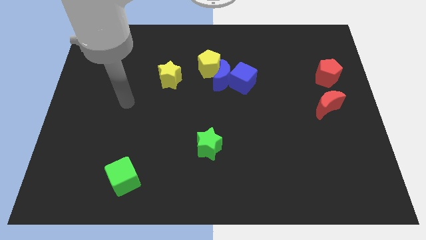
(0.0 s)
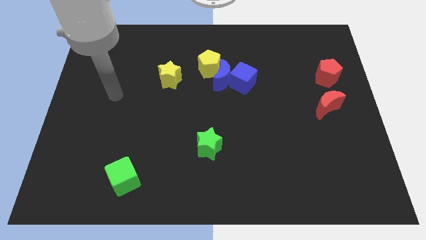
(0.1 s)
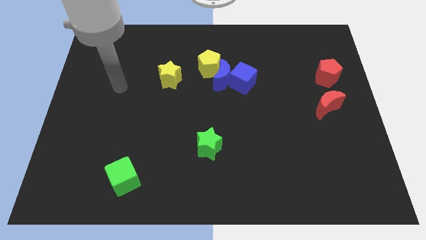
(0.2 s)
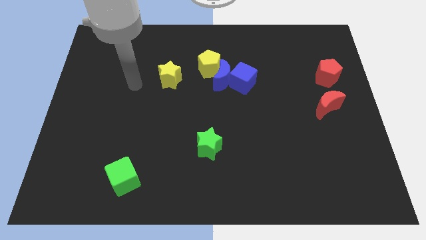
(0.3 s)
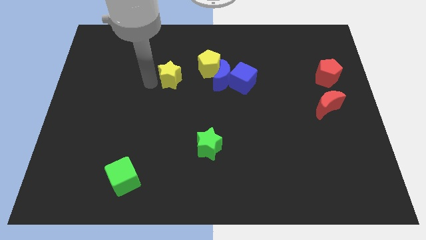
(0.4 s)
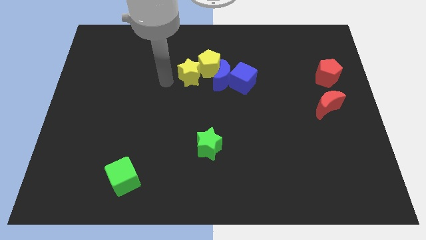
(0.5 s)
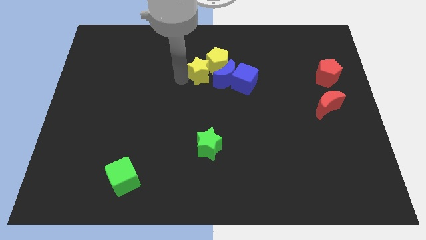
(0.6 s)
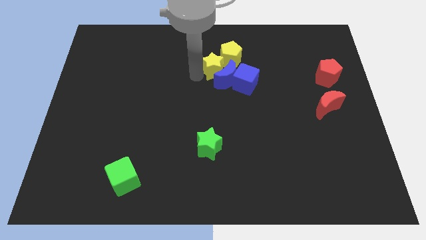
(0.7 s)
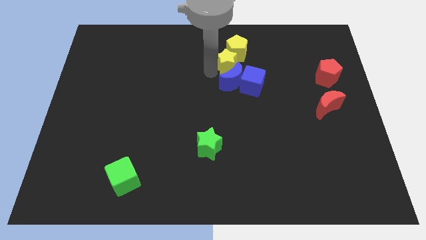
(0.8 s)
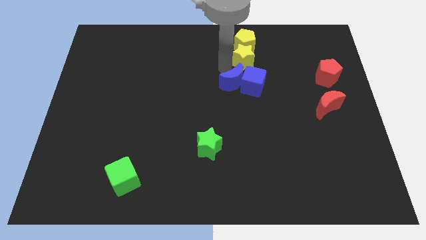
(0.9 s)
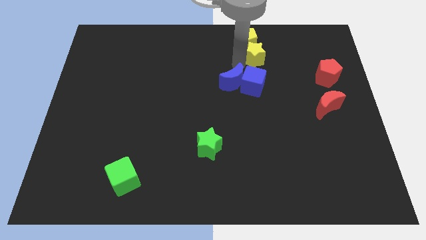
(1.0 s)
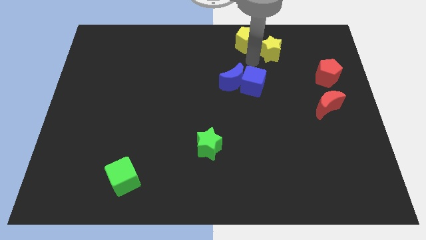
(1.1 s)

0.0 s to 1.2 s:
group up the yellow blocks at the top center of the board

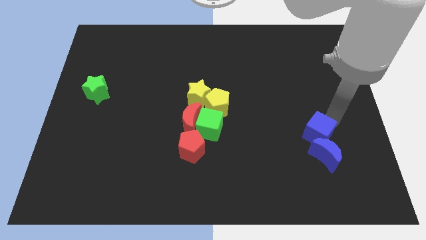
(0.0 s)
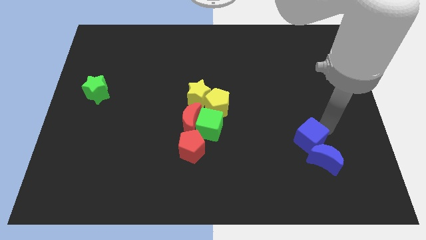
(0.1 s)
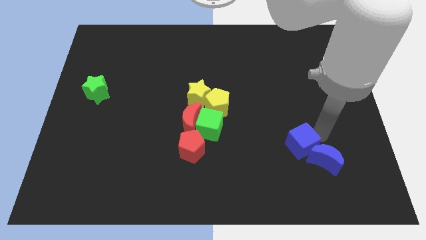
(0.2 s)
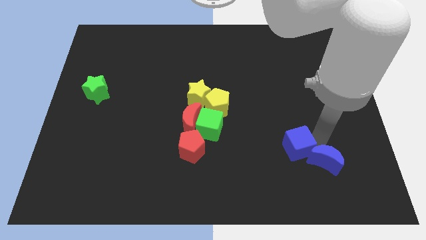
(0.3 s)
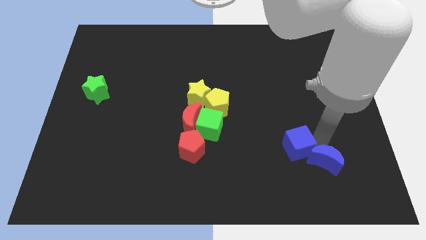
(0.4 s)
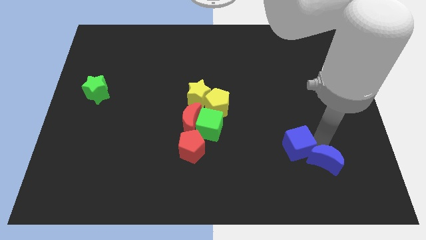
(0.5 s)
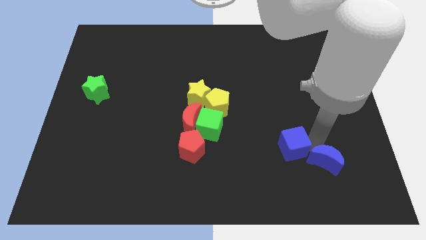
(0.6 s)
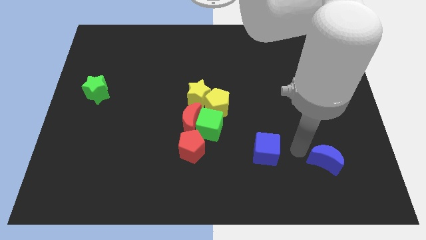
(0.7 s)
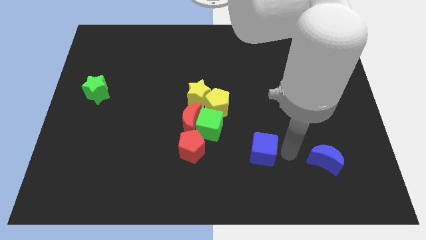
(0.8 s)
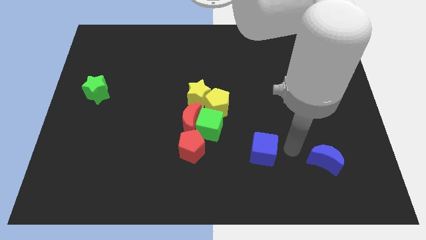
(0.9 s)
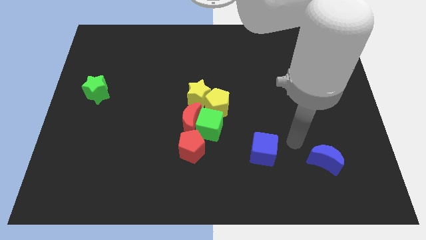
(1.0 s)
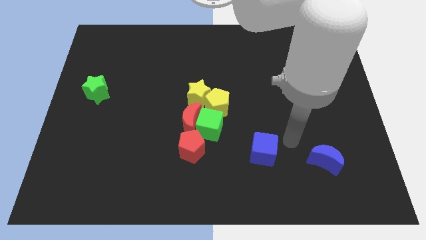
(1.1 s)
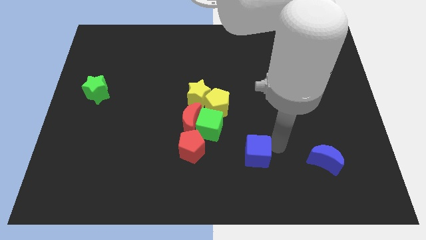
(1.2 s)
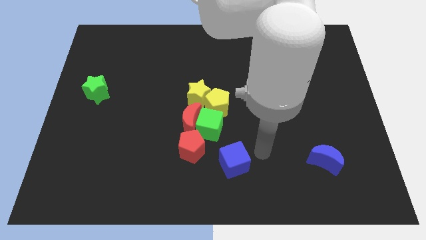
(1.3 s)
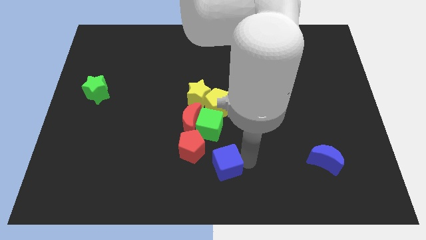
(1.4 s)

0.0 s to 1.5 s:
separate the blue square from blue crescent

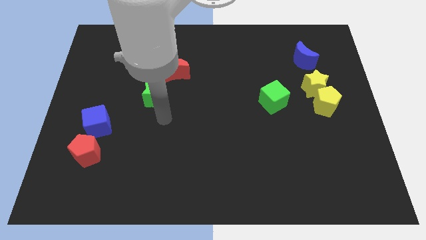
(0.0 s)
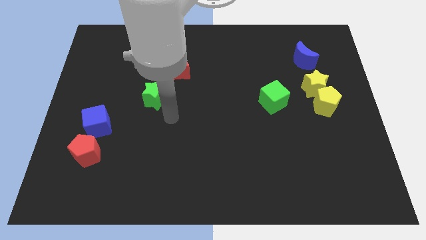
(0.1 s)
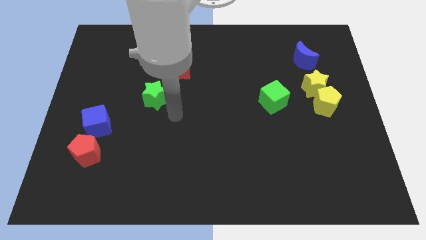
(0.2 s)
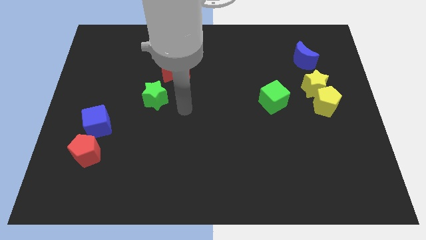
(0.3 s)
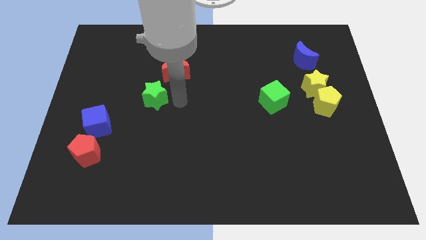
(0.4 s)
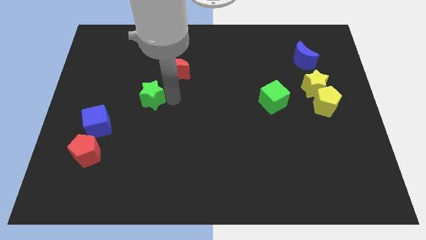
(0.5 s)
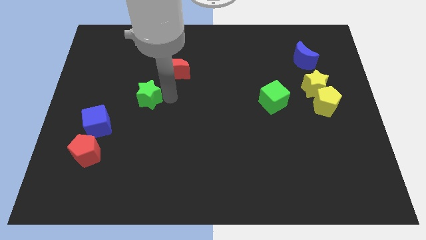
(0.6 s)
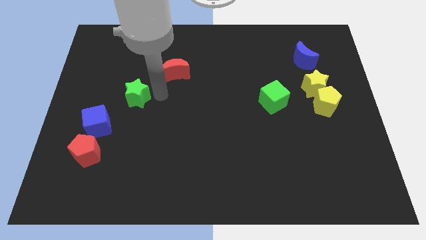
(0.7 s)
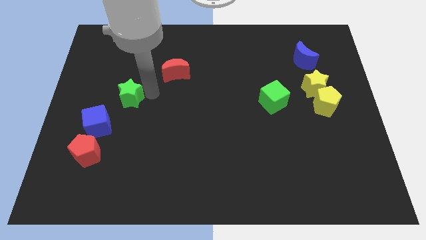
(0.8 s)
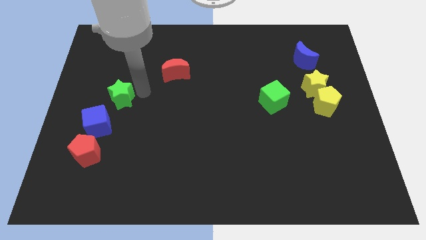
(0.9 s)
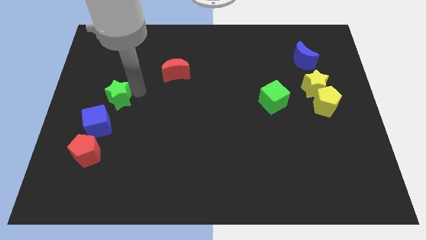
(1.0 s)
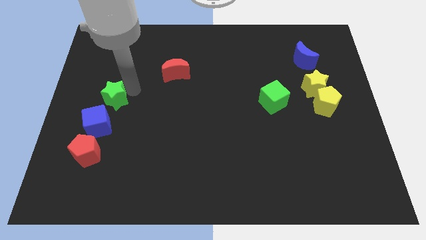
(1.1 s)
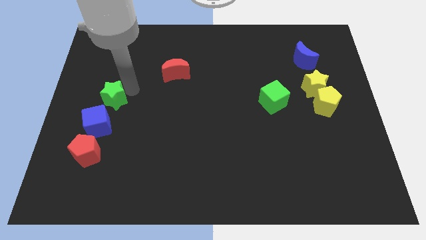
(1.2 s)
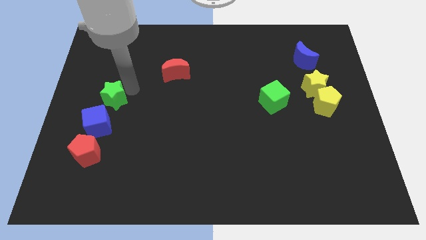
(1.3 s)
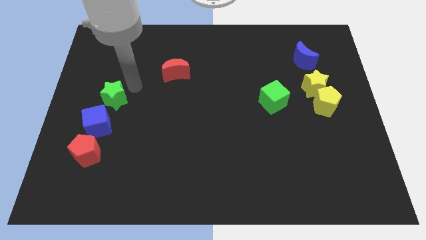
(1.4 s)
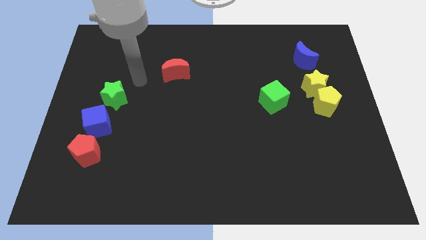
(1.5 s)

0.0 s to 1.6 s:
move green star above the blue cube

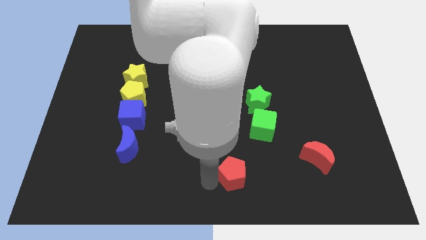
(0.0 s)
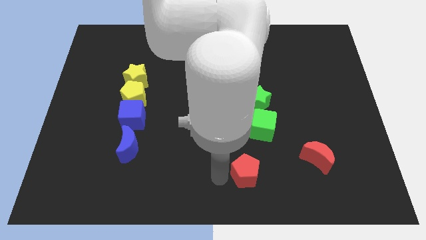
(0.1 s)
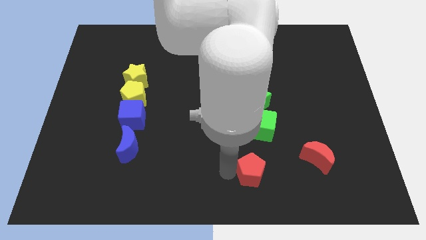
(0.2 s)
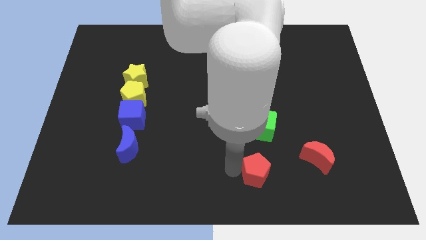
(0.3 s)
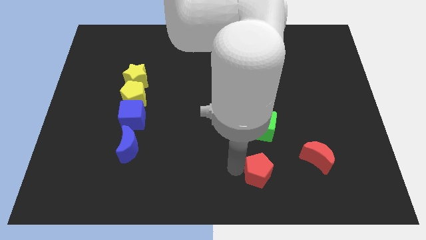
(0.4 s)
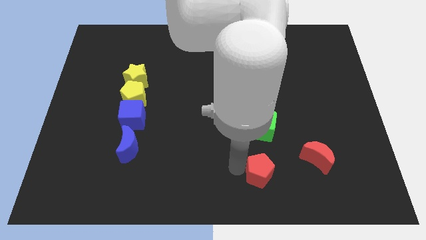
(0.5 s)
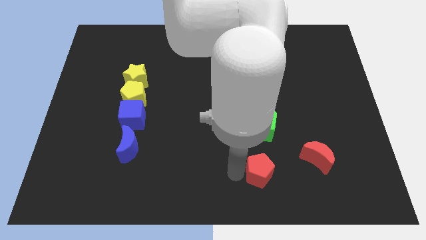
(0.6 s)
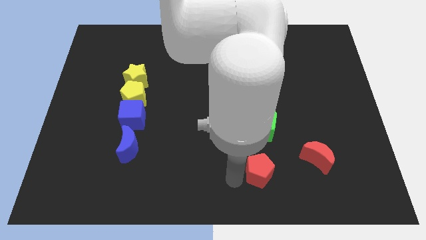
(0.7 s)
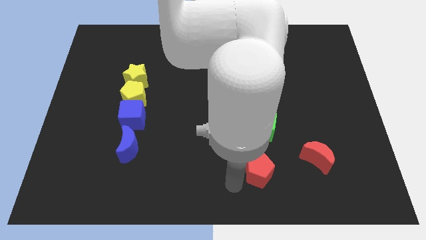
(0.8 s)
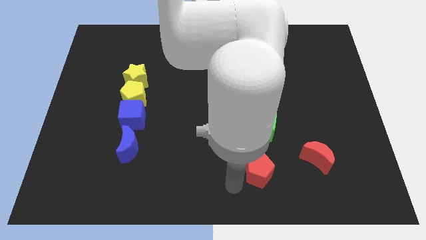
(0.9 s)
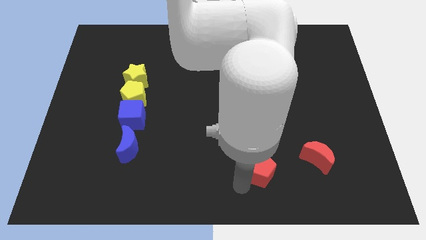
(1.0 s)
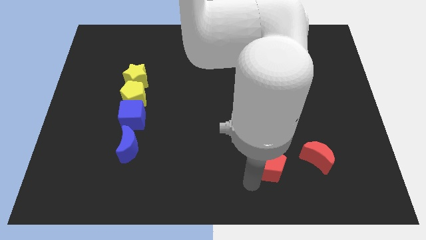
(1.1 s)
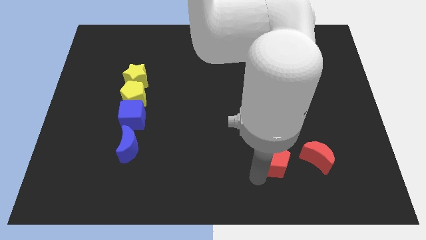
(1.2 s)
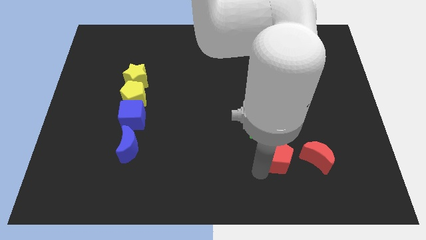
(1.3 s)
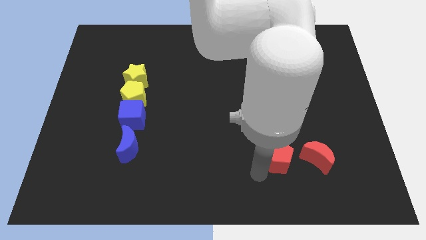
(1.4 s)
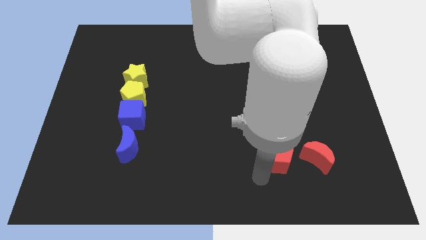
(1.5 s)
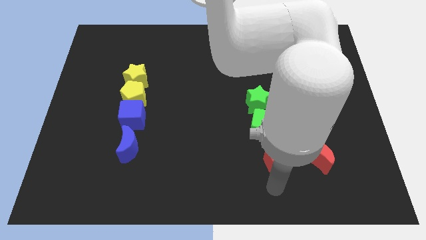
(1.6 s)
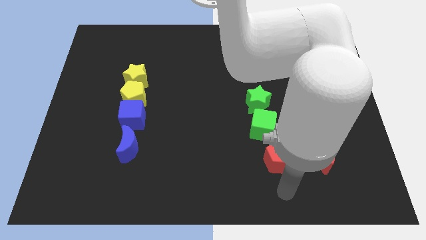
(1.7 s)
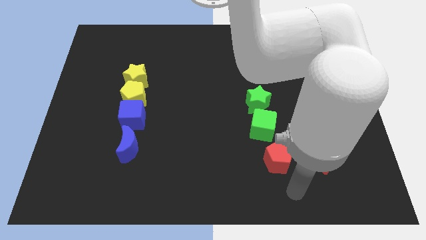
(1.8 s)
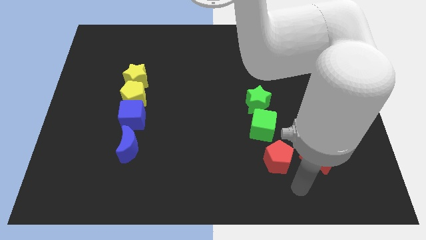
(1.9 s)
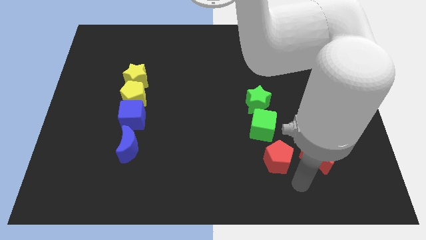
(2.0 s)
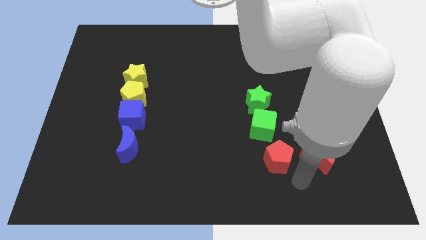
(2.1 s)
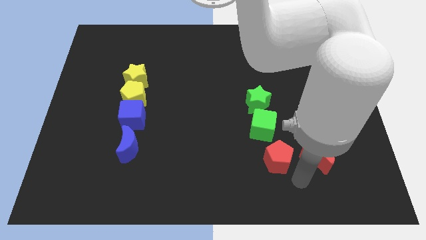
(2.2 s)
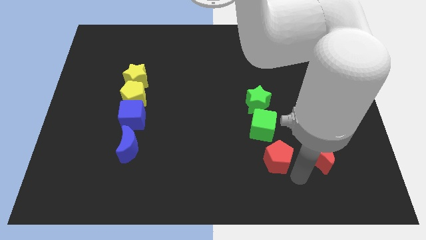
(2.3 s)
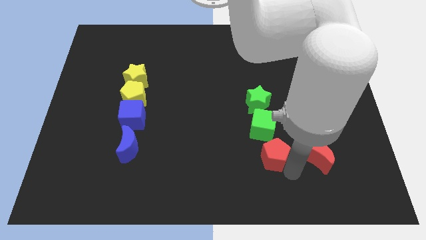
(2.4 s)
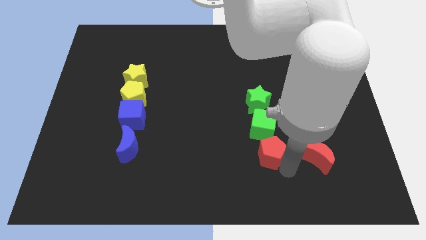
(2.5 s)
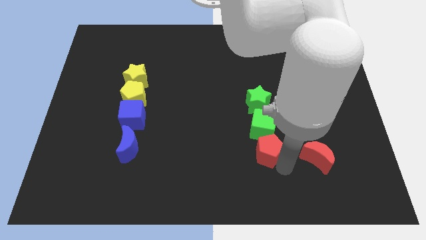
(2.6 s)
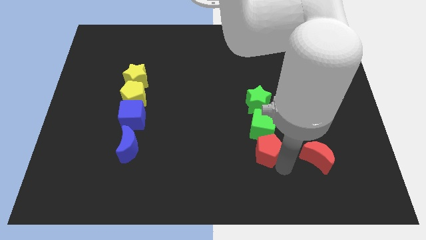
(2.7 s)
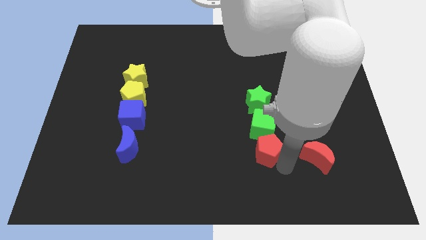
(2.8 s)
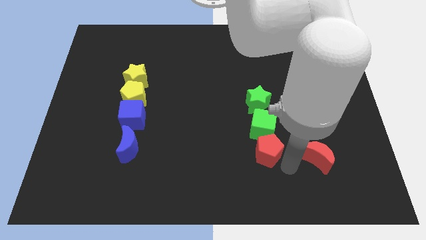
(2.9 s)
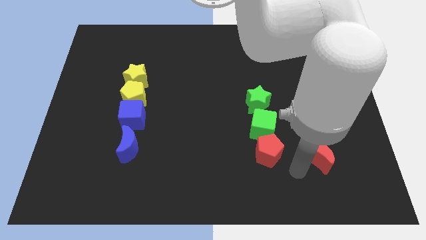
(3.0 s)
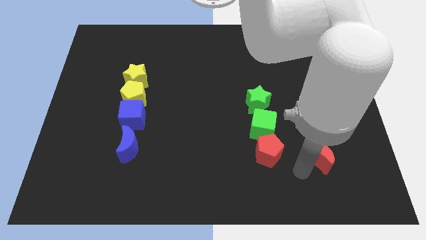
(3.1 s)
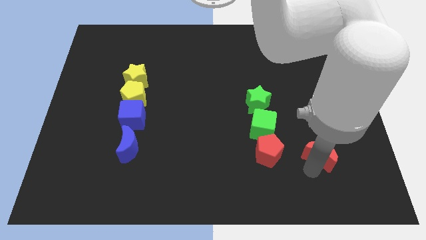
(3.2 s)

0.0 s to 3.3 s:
place the red pentagon below to the green cube

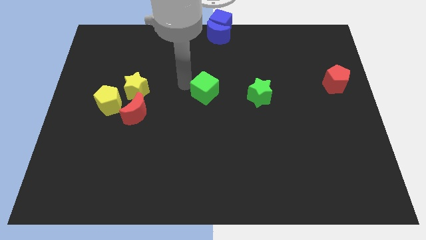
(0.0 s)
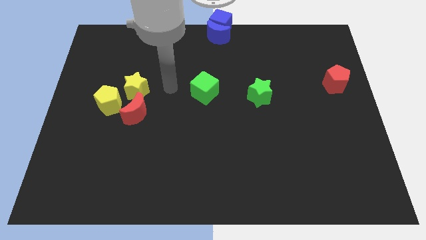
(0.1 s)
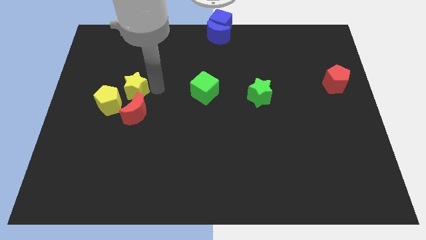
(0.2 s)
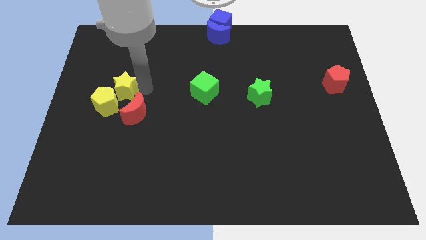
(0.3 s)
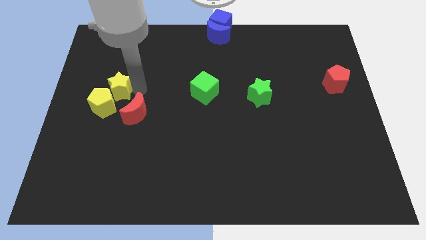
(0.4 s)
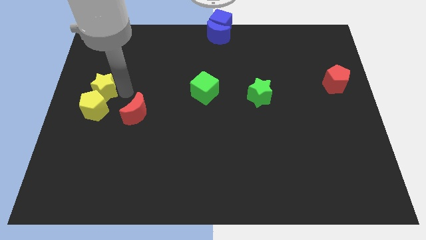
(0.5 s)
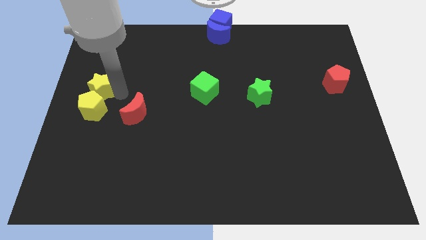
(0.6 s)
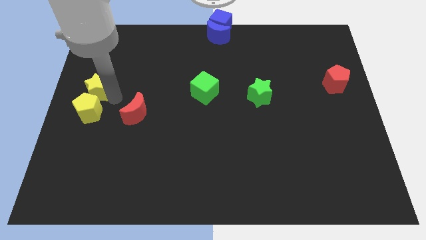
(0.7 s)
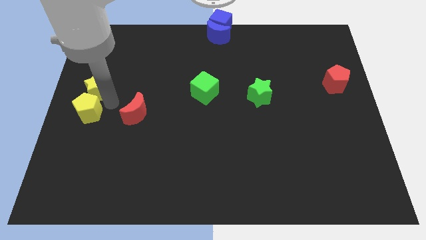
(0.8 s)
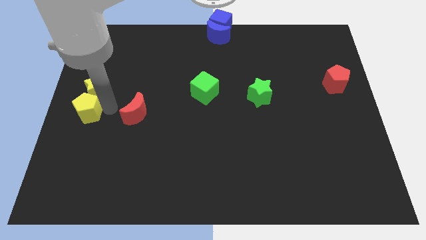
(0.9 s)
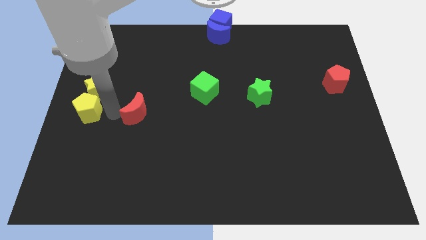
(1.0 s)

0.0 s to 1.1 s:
push the yellow star into yellow pentagon

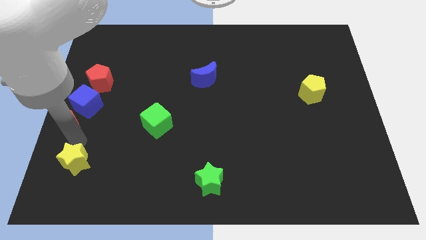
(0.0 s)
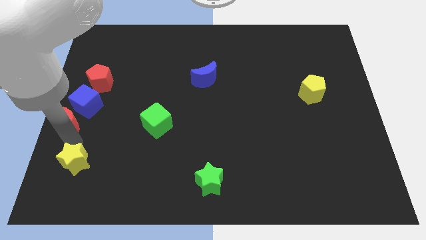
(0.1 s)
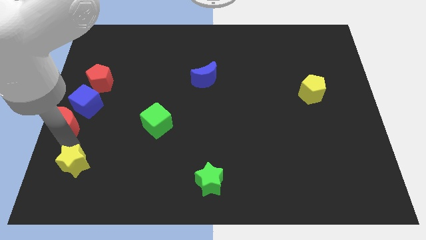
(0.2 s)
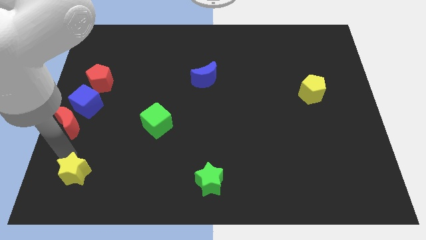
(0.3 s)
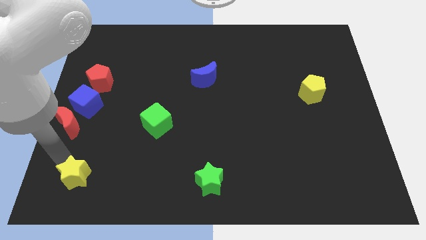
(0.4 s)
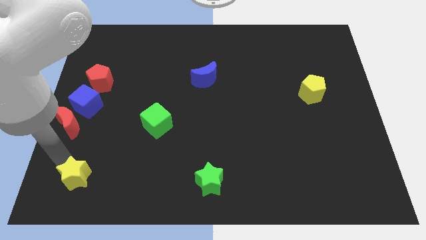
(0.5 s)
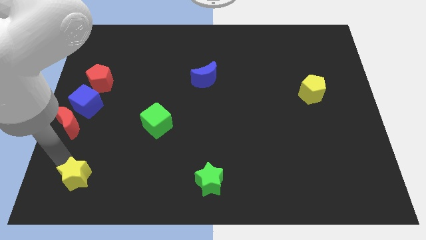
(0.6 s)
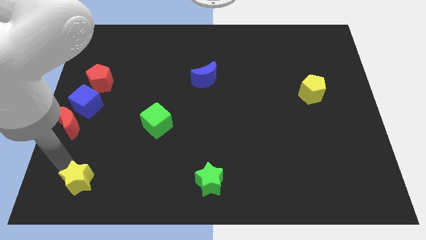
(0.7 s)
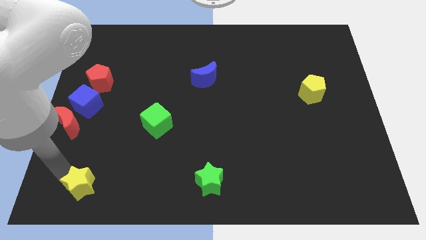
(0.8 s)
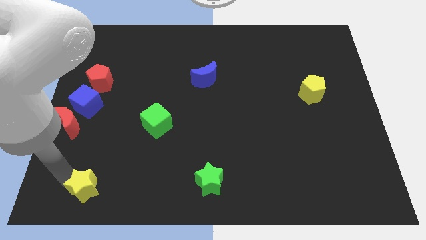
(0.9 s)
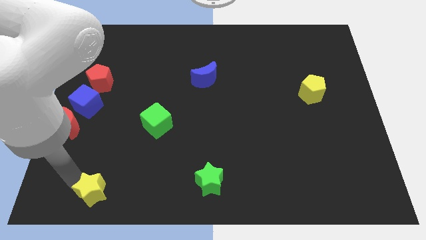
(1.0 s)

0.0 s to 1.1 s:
move yellow star to the bottom
